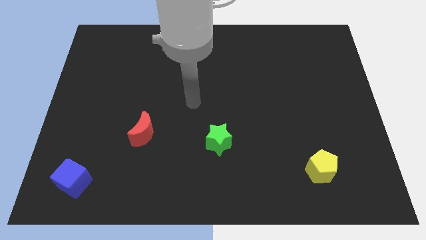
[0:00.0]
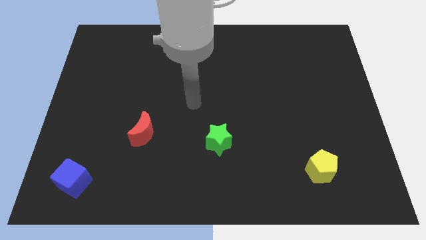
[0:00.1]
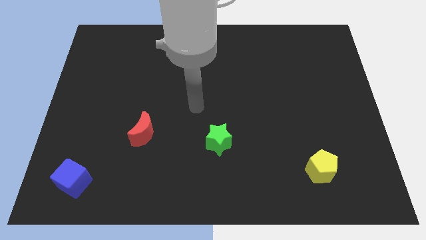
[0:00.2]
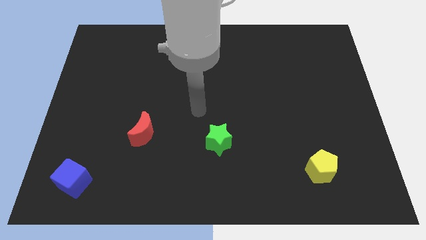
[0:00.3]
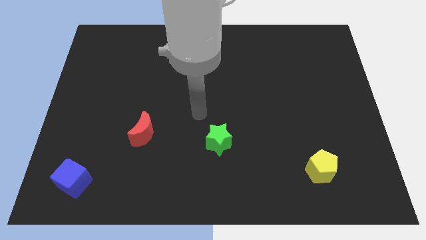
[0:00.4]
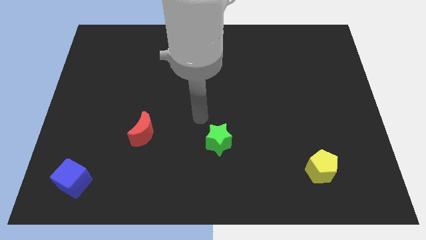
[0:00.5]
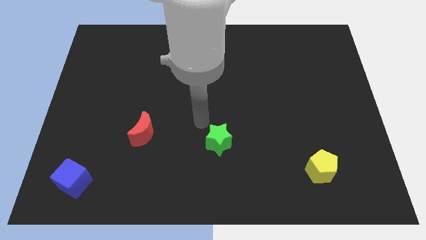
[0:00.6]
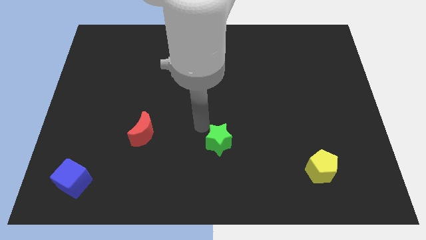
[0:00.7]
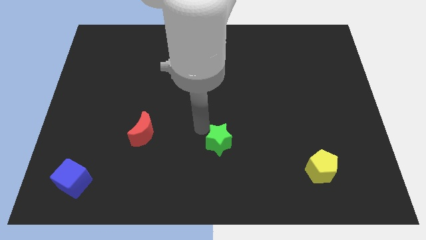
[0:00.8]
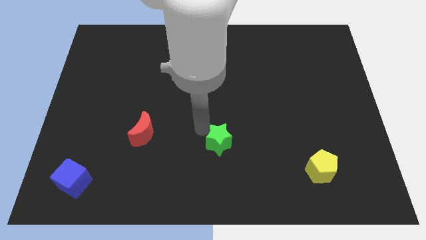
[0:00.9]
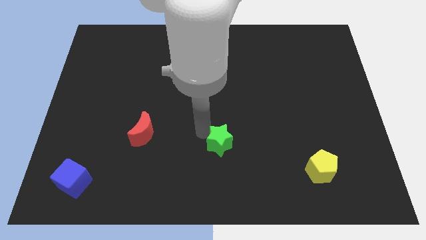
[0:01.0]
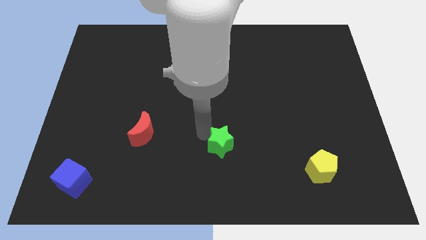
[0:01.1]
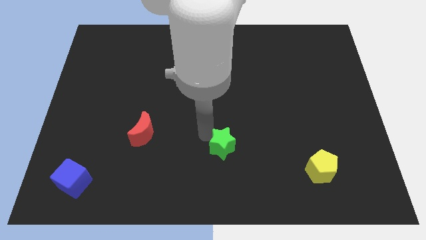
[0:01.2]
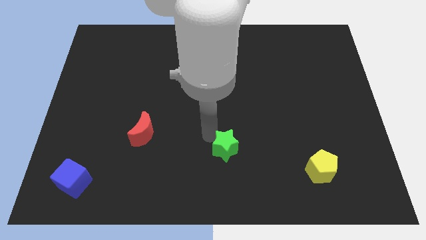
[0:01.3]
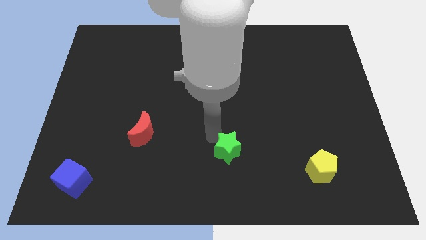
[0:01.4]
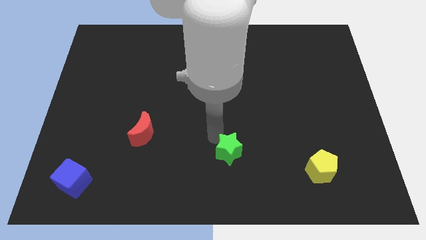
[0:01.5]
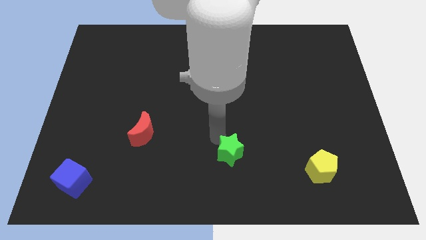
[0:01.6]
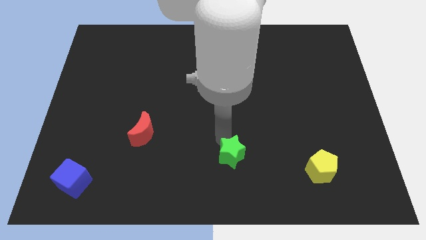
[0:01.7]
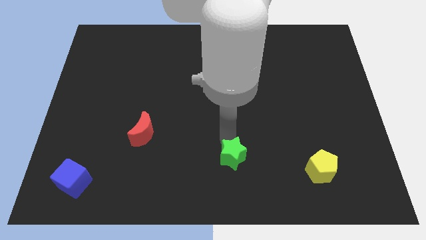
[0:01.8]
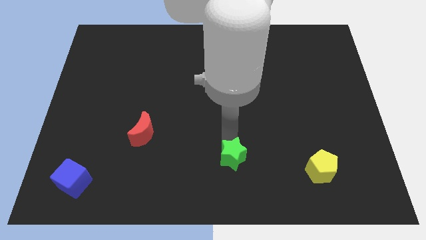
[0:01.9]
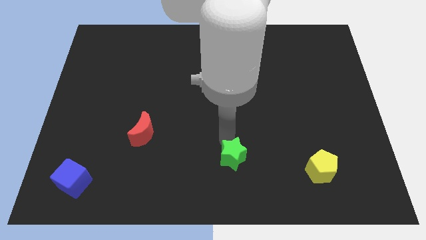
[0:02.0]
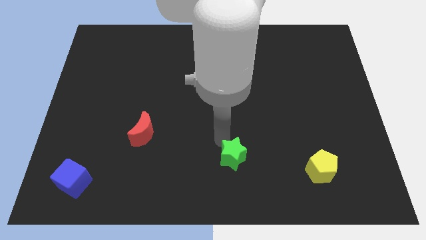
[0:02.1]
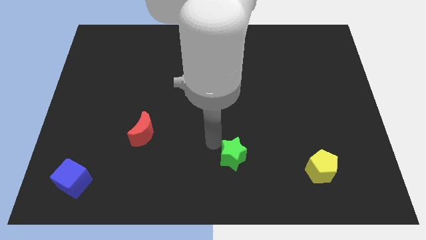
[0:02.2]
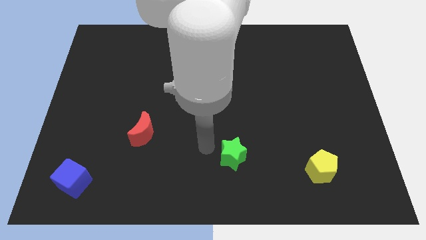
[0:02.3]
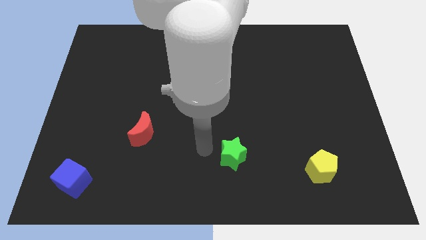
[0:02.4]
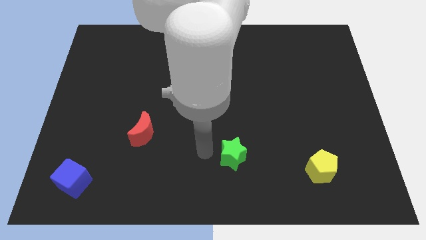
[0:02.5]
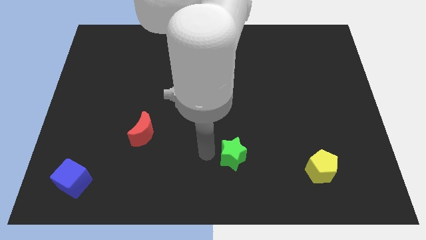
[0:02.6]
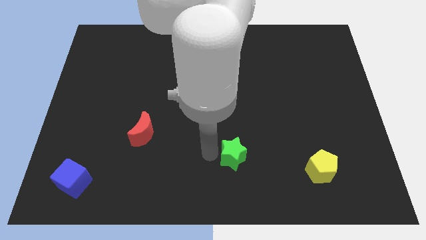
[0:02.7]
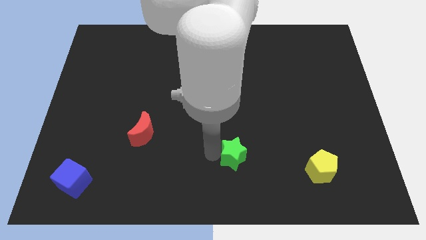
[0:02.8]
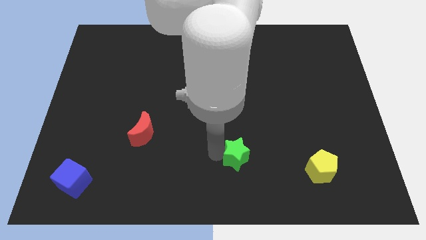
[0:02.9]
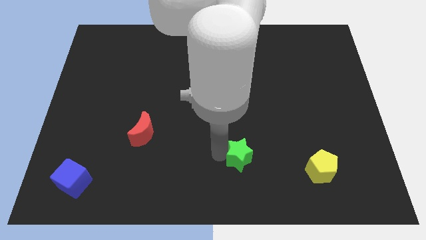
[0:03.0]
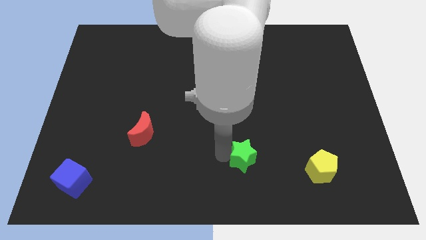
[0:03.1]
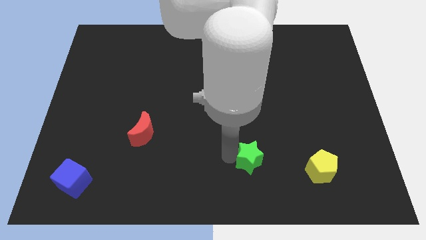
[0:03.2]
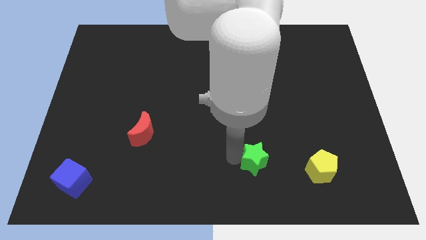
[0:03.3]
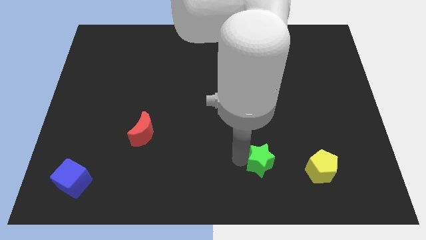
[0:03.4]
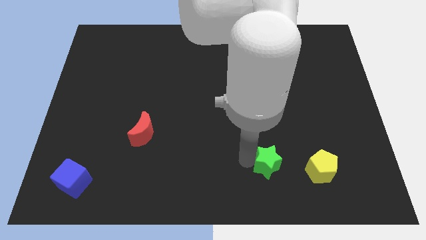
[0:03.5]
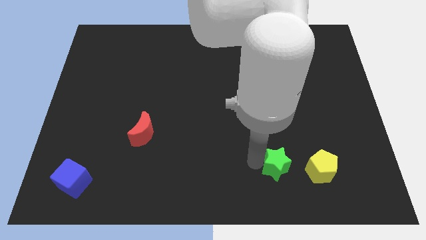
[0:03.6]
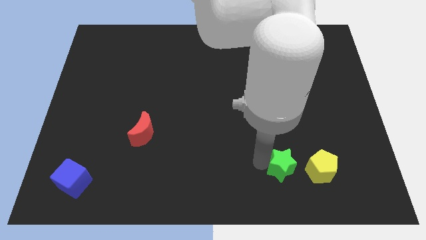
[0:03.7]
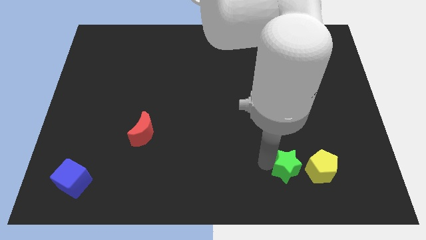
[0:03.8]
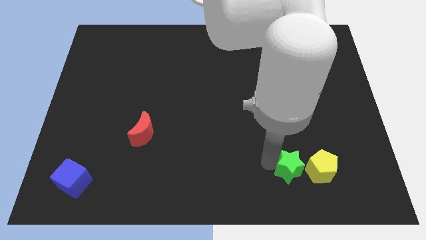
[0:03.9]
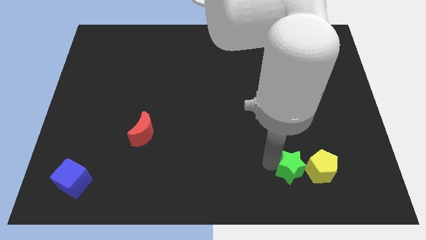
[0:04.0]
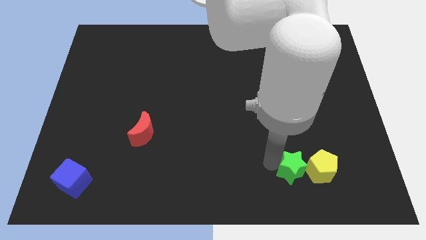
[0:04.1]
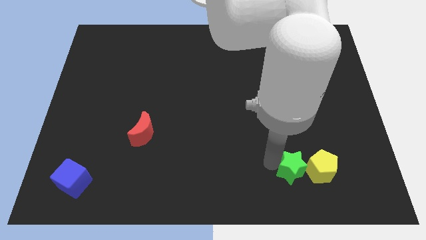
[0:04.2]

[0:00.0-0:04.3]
put the green block close to the yellow pentagon

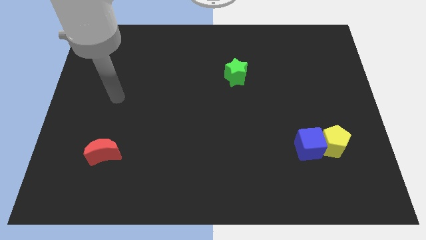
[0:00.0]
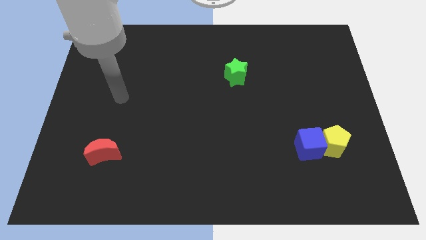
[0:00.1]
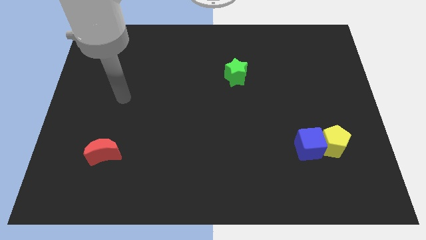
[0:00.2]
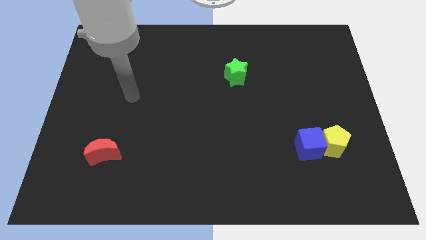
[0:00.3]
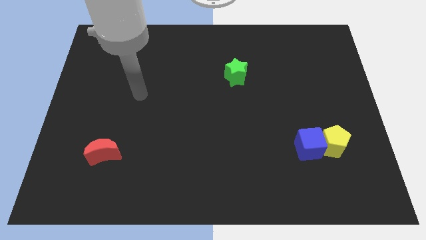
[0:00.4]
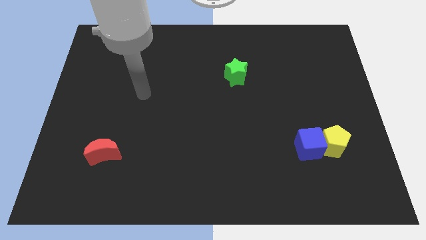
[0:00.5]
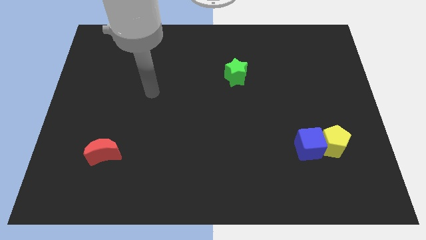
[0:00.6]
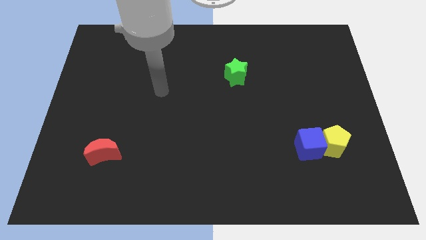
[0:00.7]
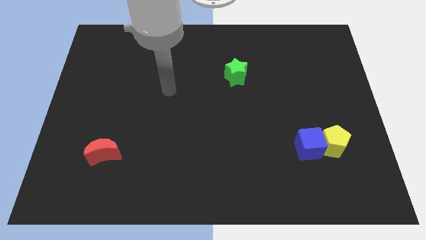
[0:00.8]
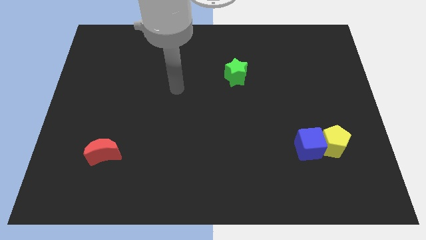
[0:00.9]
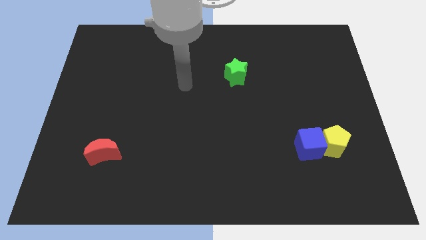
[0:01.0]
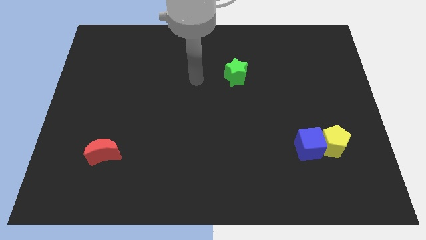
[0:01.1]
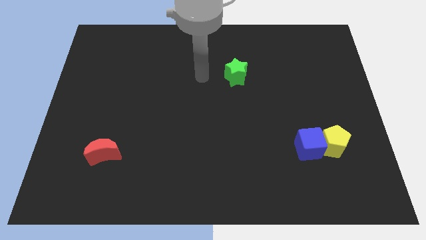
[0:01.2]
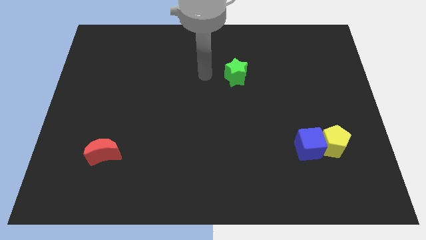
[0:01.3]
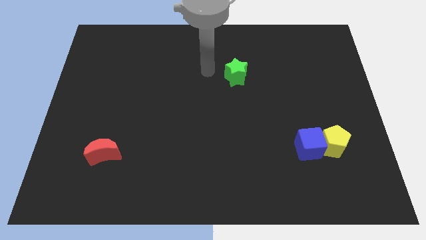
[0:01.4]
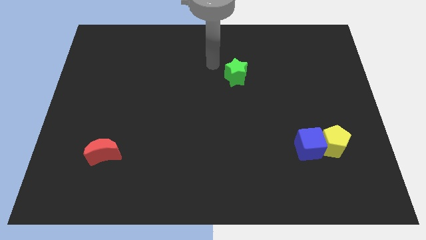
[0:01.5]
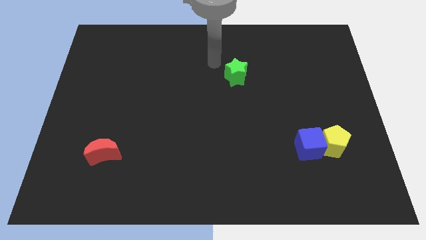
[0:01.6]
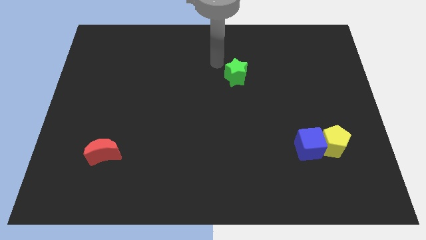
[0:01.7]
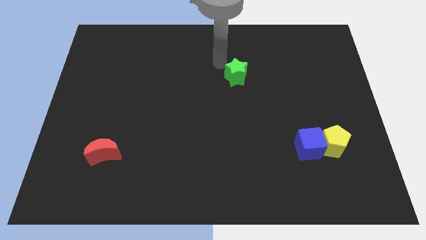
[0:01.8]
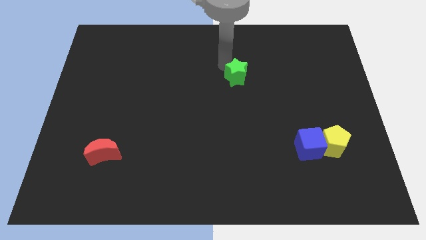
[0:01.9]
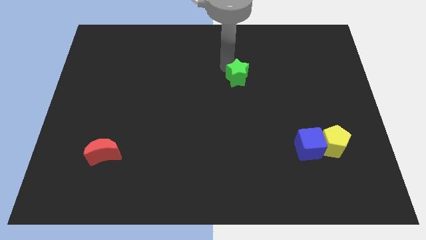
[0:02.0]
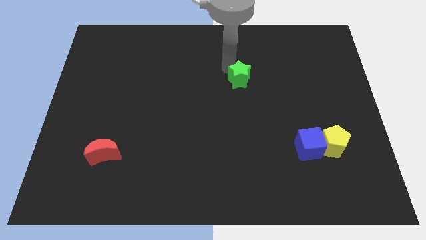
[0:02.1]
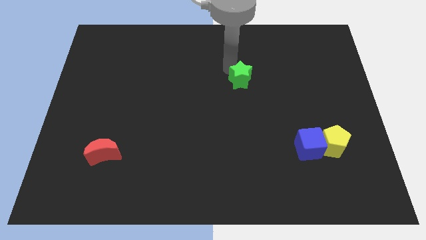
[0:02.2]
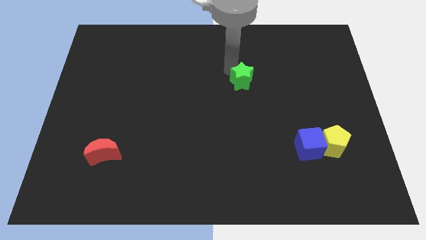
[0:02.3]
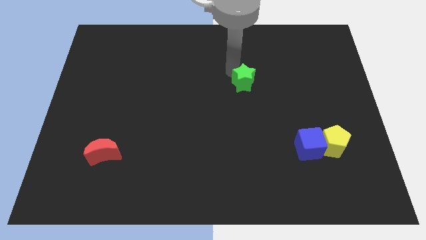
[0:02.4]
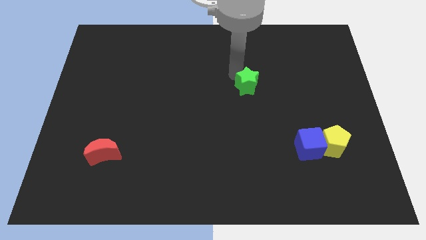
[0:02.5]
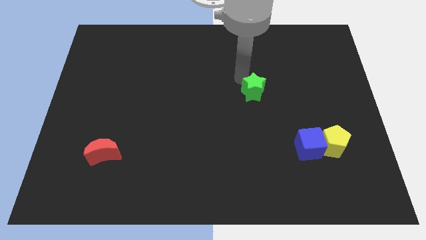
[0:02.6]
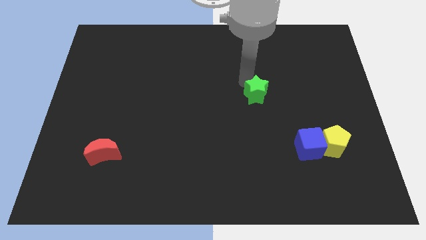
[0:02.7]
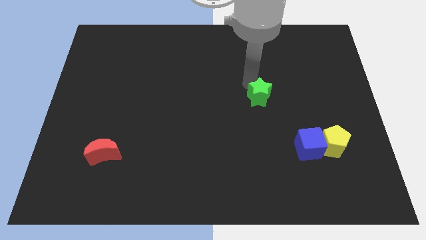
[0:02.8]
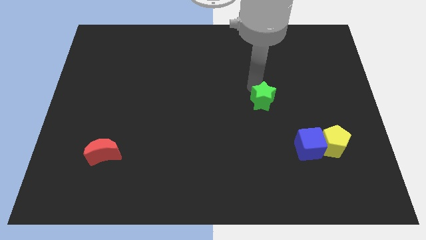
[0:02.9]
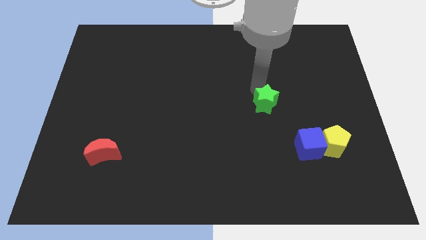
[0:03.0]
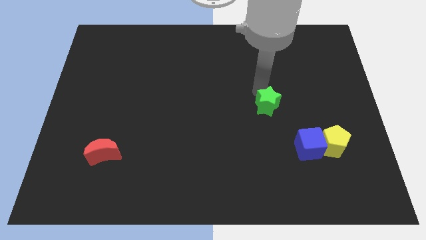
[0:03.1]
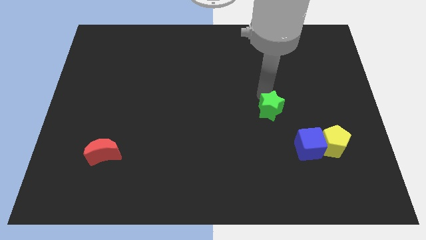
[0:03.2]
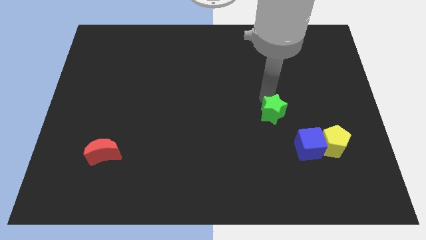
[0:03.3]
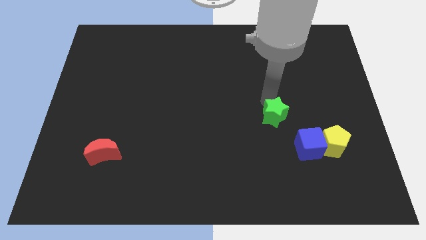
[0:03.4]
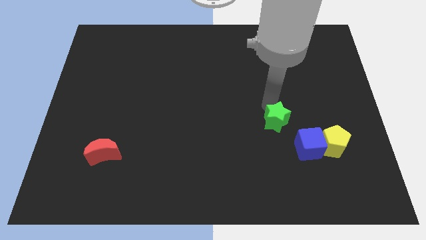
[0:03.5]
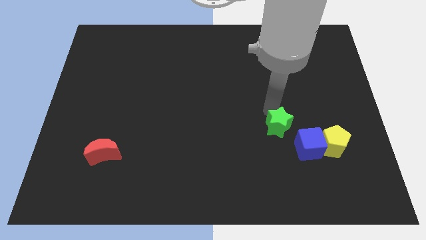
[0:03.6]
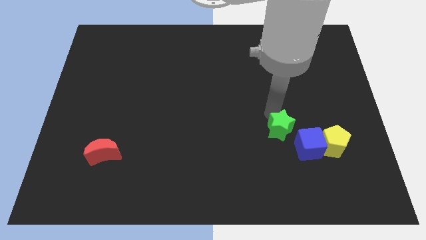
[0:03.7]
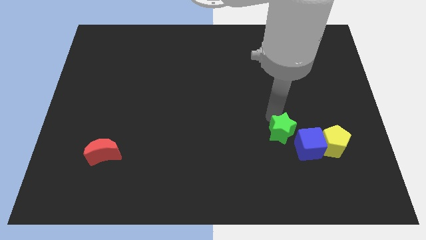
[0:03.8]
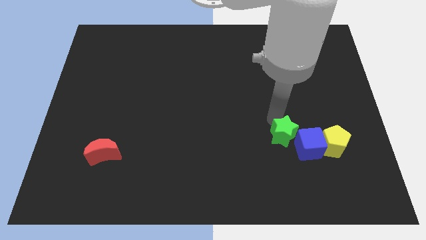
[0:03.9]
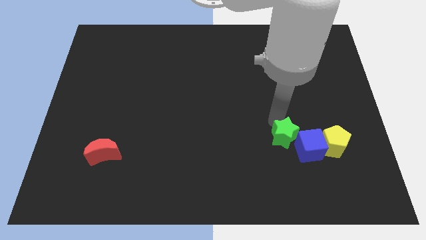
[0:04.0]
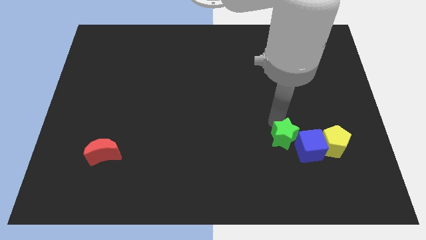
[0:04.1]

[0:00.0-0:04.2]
put the green block to the blue block
